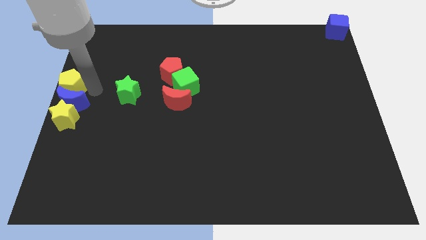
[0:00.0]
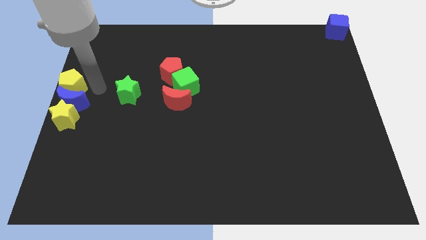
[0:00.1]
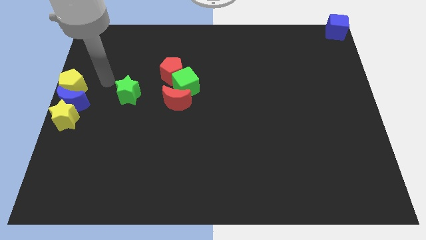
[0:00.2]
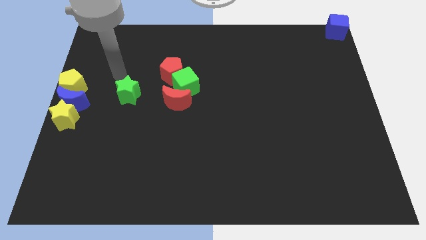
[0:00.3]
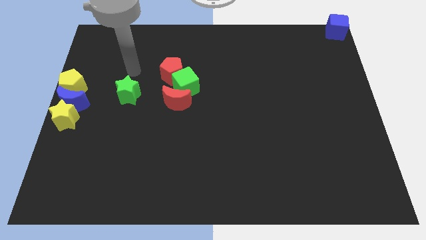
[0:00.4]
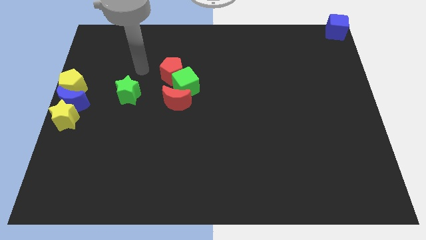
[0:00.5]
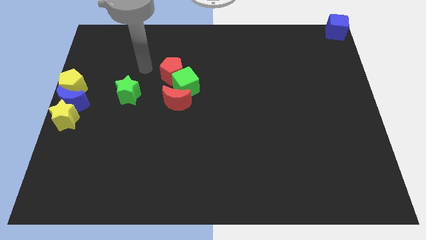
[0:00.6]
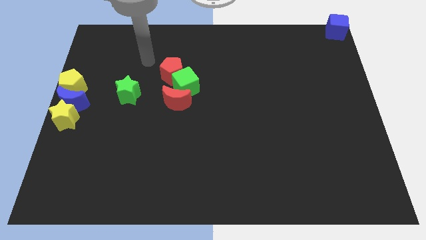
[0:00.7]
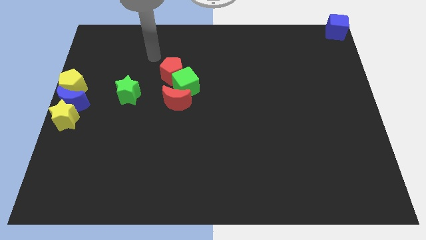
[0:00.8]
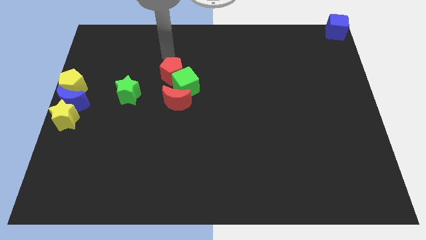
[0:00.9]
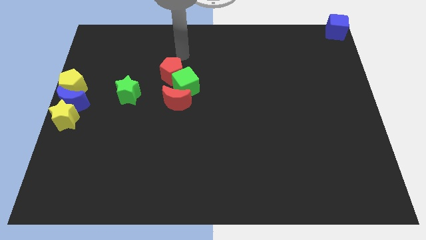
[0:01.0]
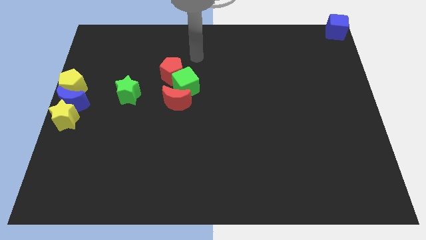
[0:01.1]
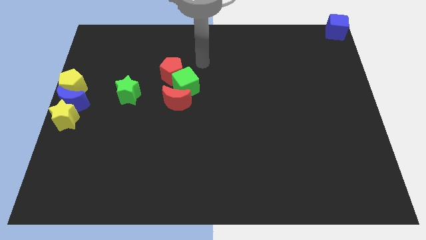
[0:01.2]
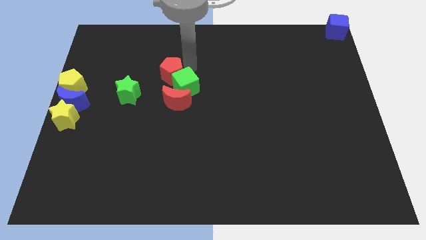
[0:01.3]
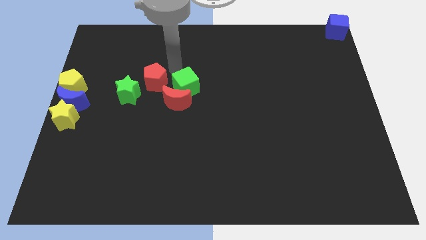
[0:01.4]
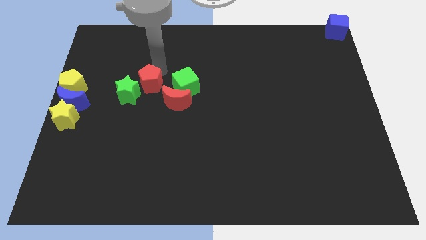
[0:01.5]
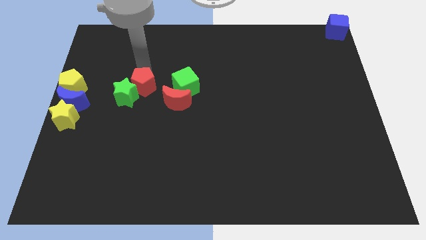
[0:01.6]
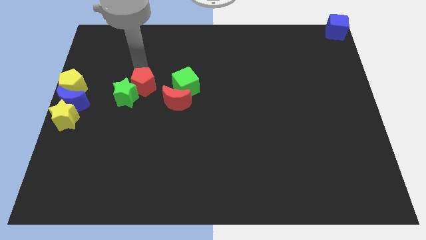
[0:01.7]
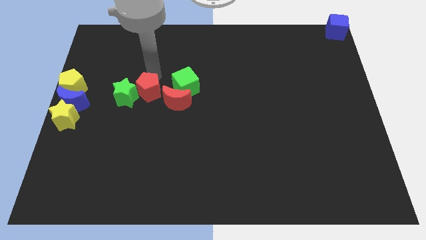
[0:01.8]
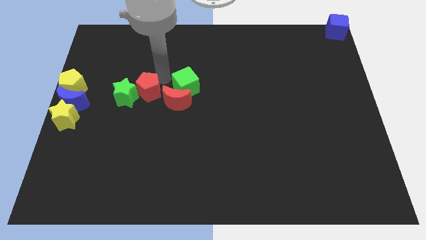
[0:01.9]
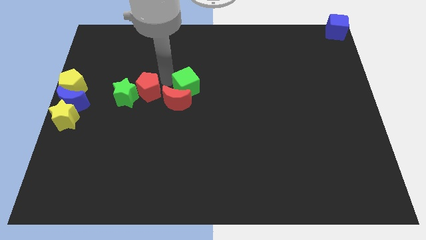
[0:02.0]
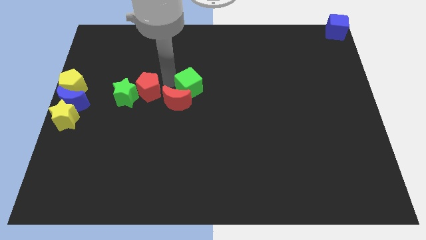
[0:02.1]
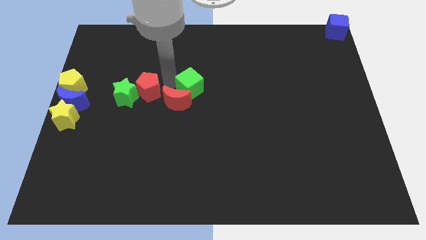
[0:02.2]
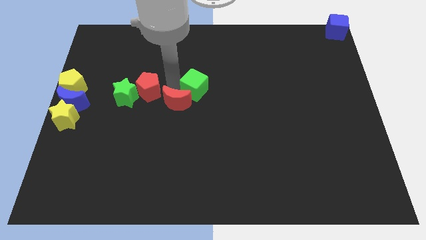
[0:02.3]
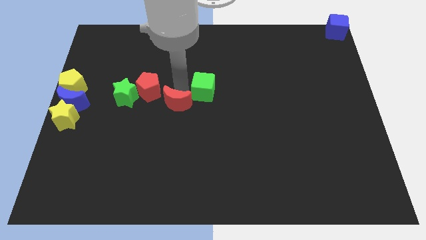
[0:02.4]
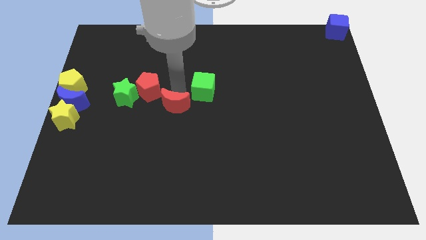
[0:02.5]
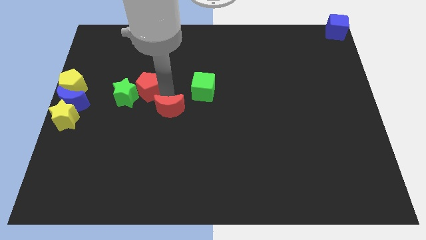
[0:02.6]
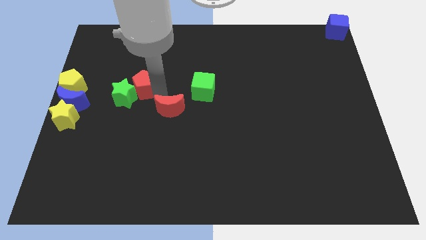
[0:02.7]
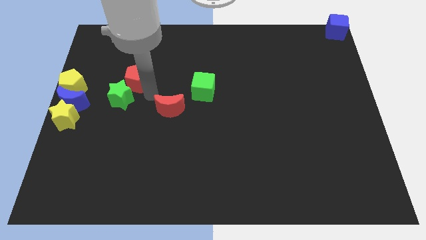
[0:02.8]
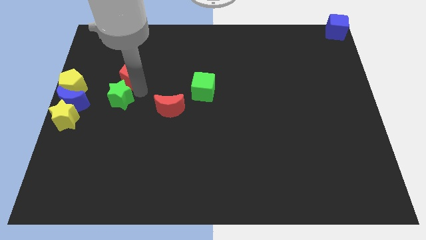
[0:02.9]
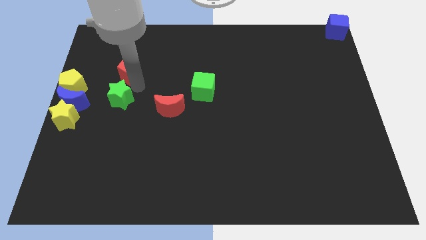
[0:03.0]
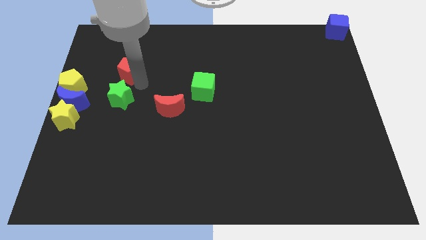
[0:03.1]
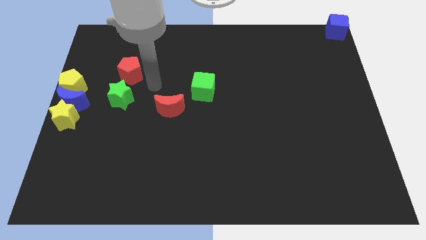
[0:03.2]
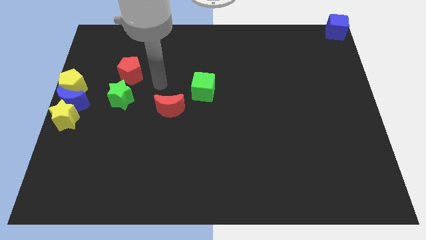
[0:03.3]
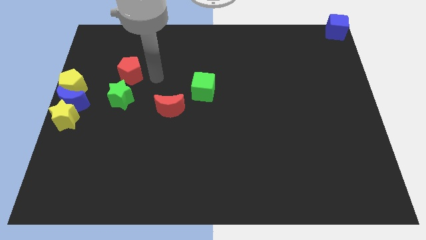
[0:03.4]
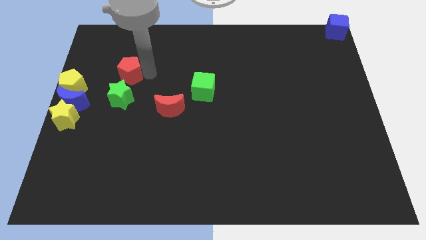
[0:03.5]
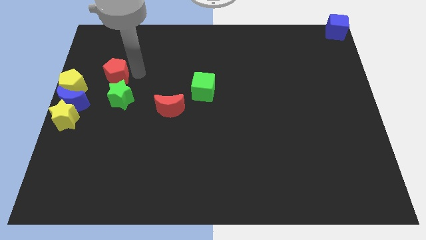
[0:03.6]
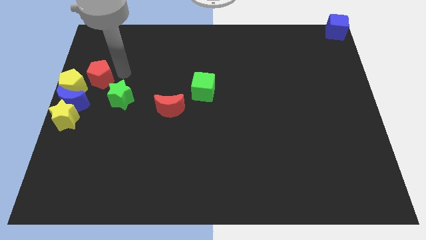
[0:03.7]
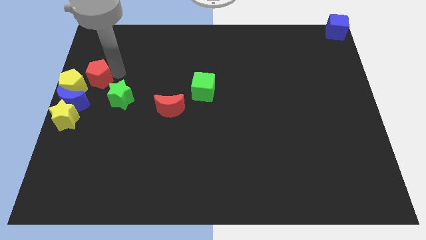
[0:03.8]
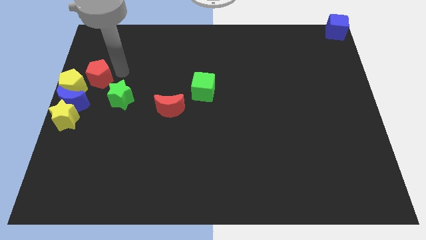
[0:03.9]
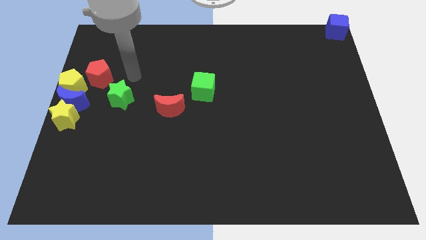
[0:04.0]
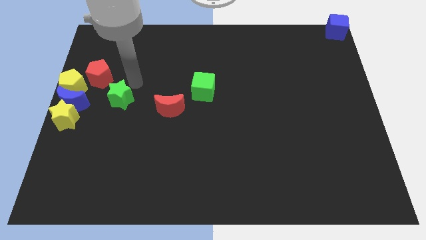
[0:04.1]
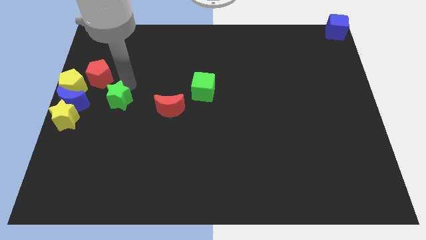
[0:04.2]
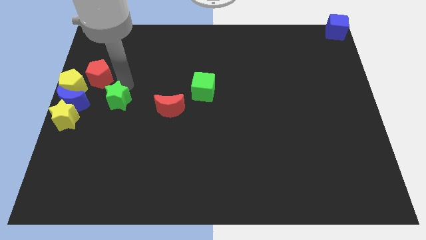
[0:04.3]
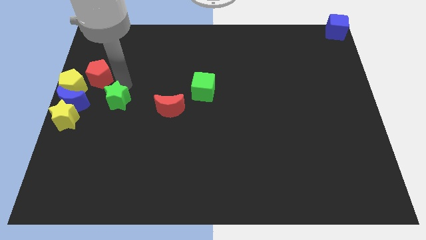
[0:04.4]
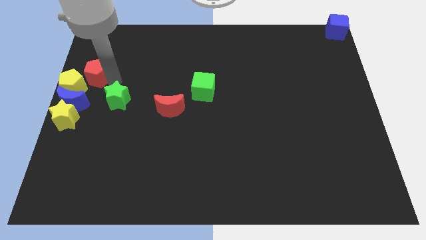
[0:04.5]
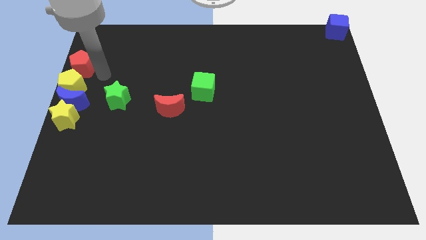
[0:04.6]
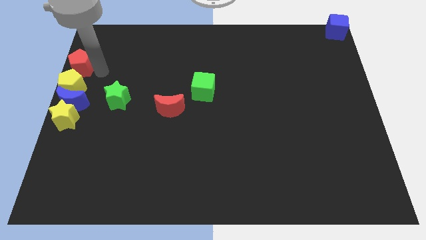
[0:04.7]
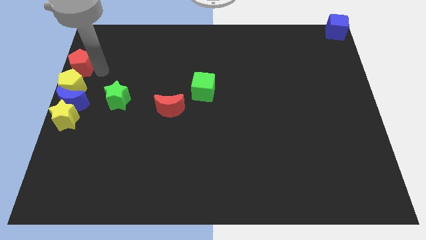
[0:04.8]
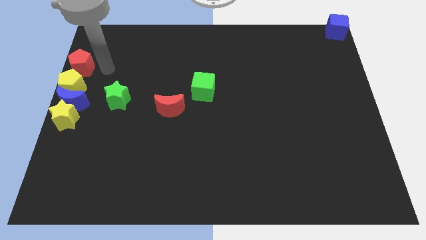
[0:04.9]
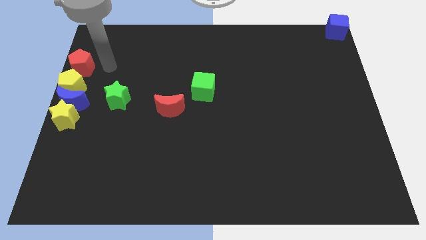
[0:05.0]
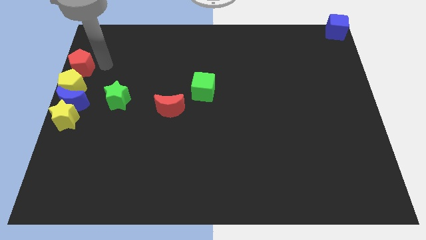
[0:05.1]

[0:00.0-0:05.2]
move the red pentagon above the yellow pentagon

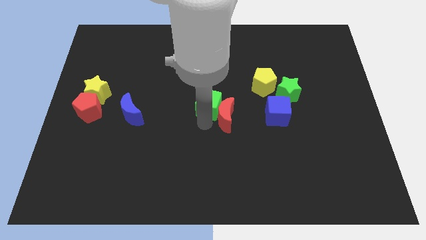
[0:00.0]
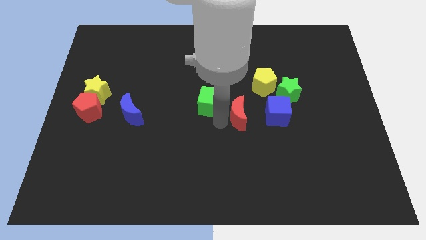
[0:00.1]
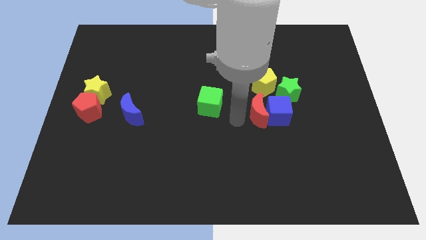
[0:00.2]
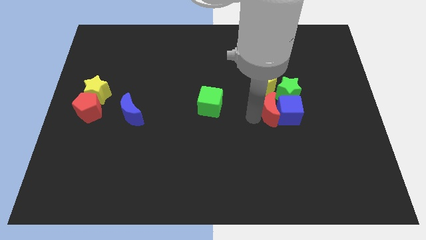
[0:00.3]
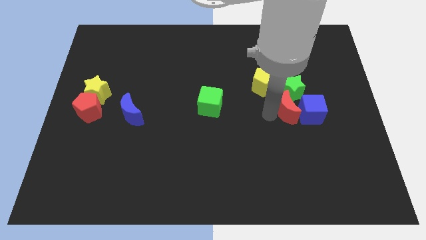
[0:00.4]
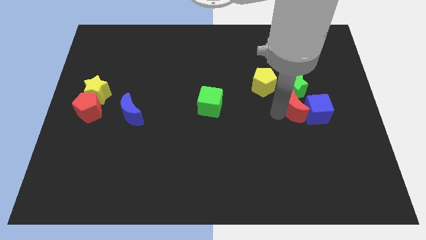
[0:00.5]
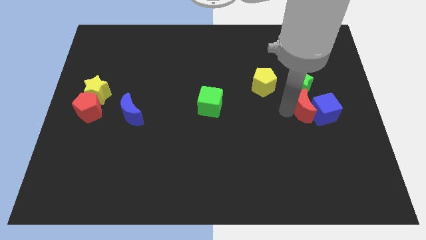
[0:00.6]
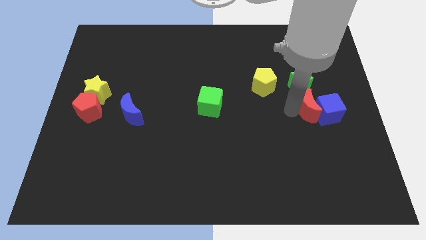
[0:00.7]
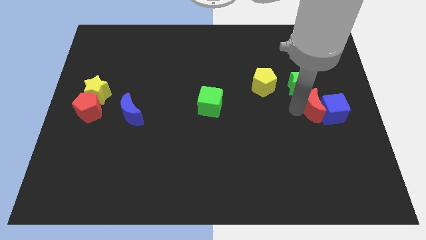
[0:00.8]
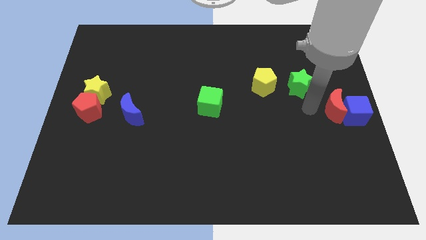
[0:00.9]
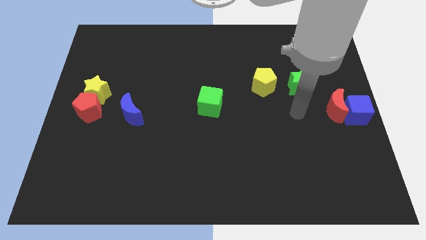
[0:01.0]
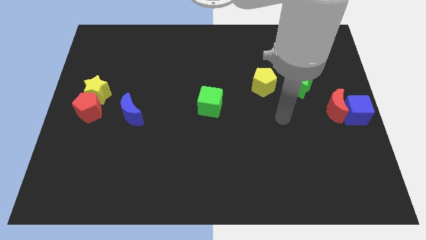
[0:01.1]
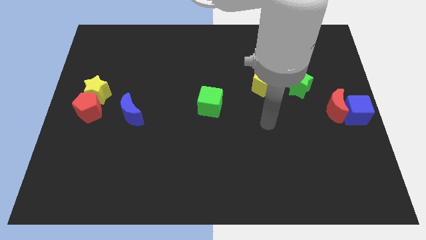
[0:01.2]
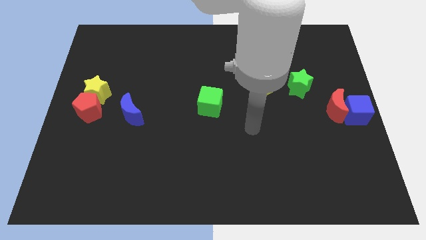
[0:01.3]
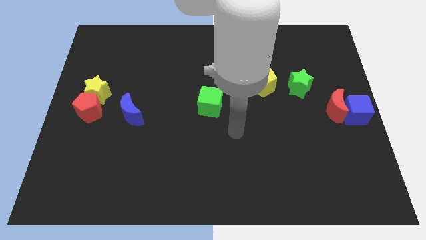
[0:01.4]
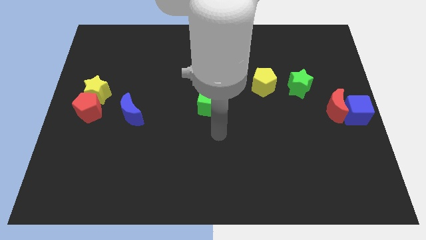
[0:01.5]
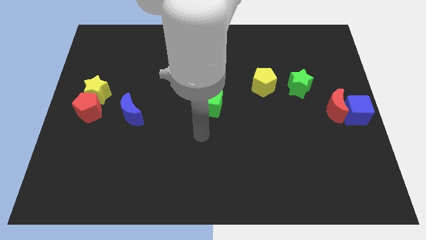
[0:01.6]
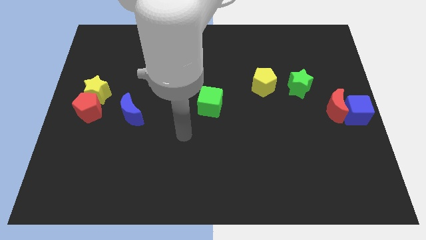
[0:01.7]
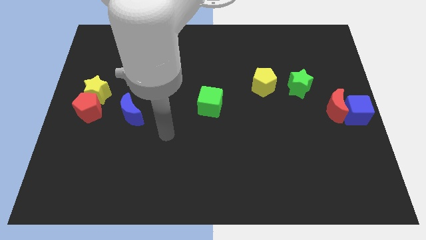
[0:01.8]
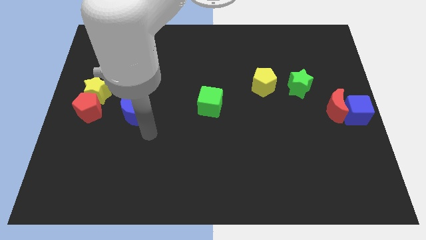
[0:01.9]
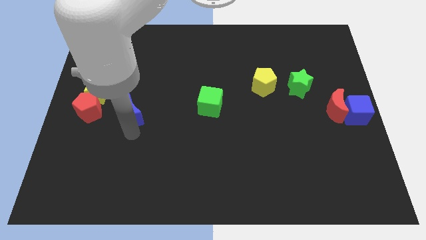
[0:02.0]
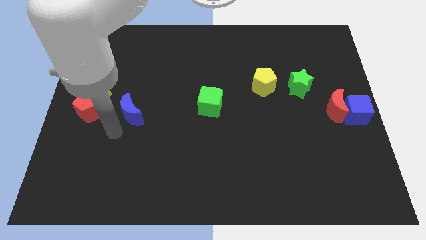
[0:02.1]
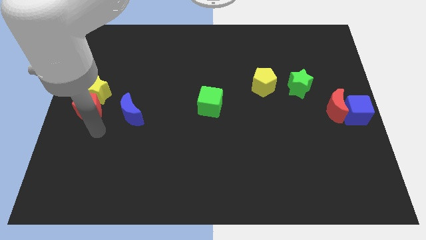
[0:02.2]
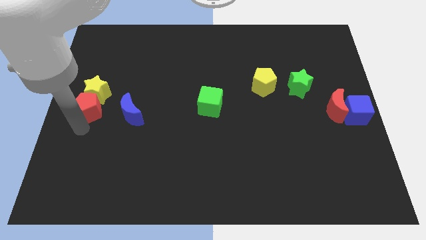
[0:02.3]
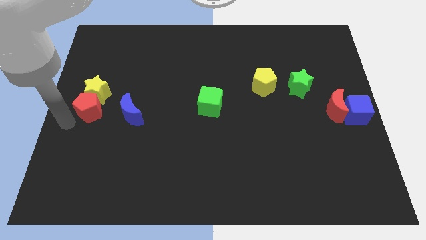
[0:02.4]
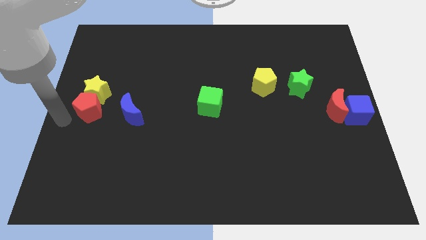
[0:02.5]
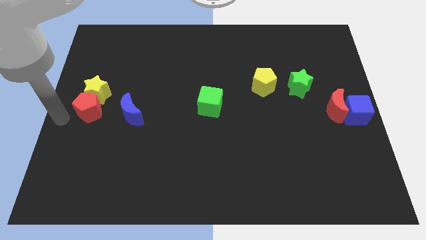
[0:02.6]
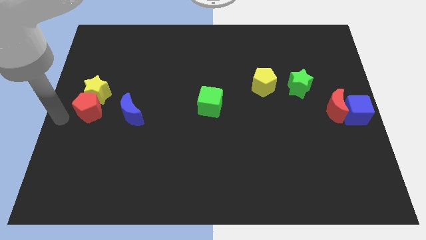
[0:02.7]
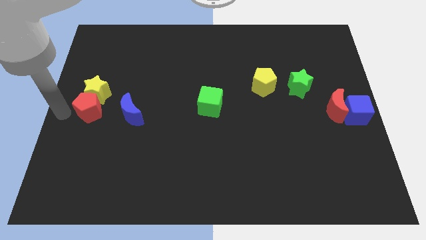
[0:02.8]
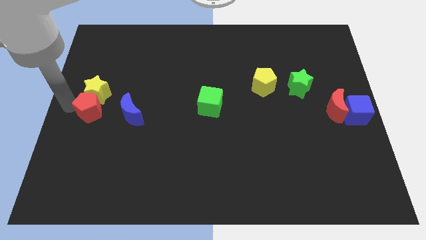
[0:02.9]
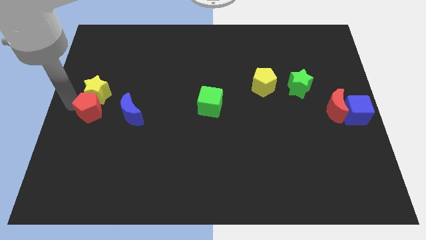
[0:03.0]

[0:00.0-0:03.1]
push the red moon into the blue cube

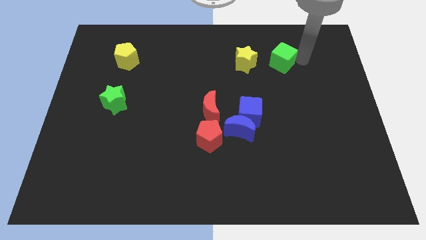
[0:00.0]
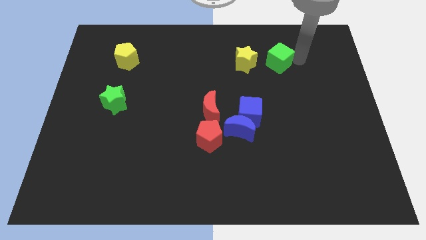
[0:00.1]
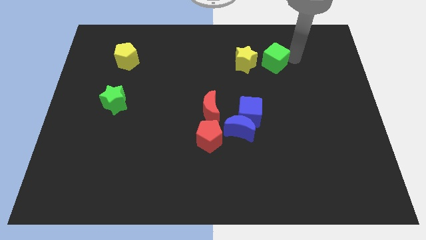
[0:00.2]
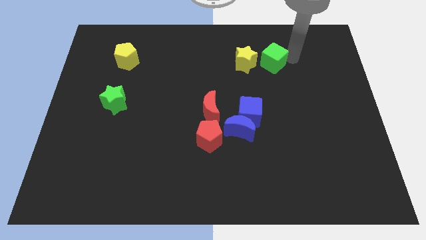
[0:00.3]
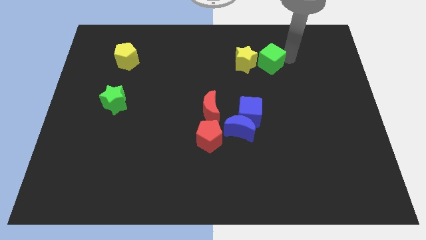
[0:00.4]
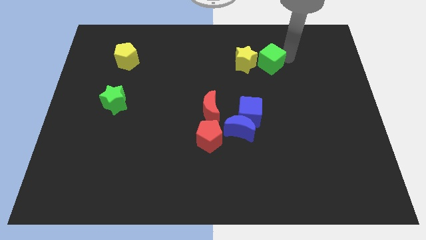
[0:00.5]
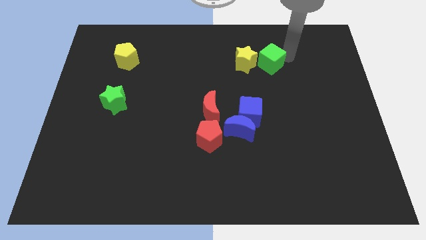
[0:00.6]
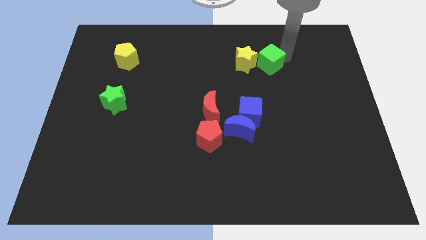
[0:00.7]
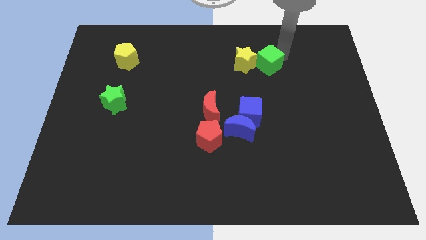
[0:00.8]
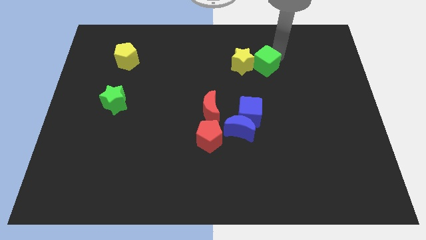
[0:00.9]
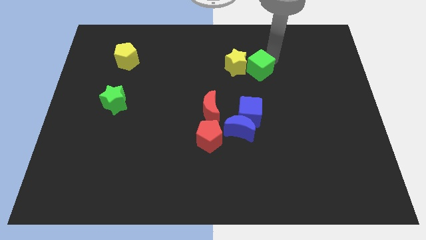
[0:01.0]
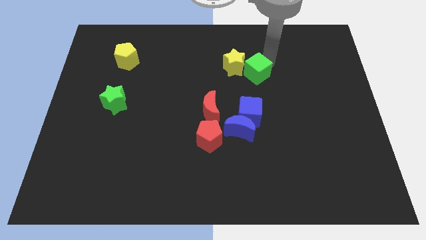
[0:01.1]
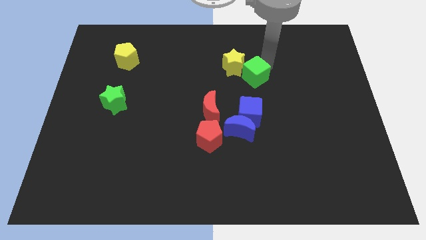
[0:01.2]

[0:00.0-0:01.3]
push green cube into yellow star
